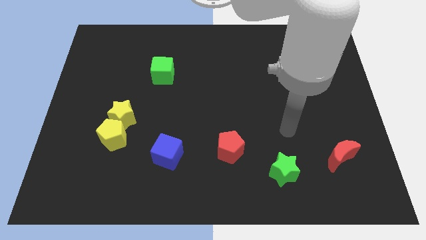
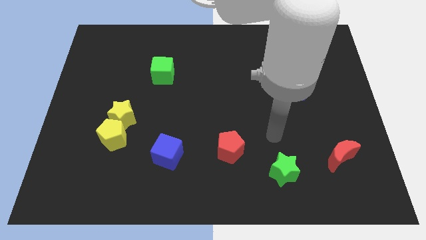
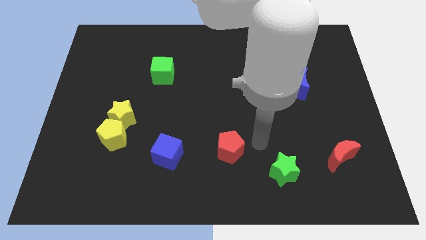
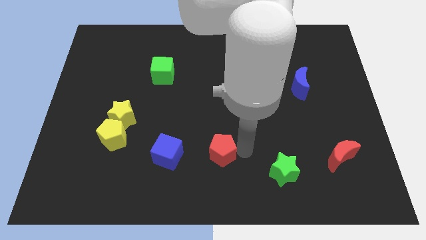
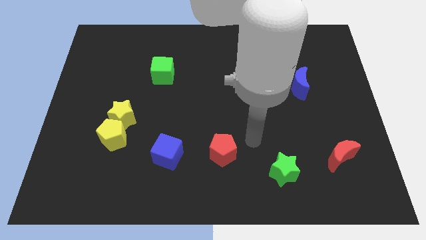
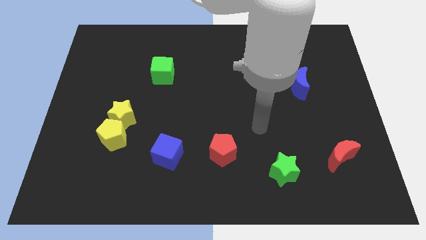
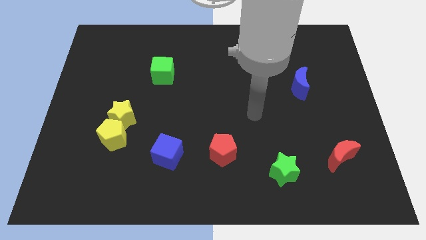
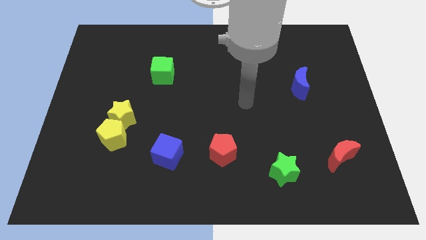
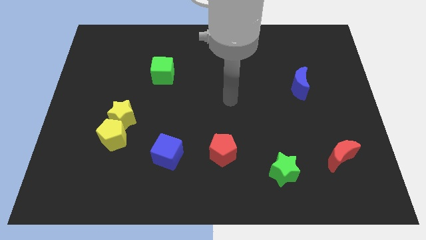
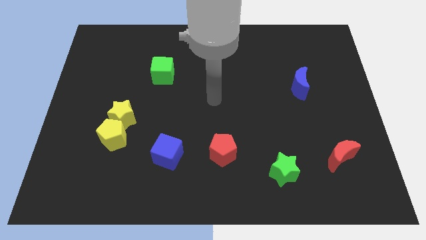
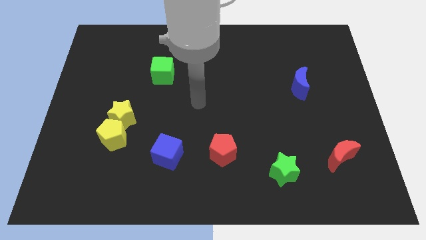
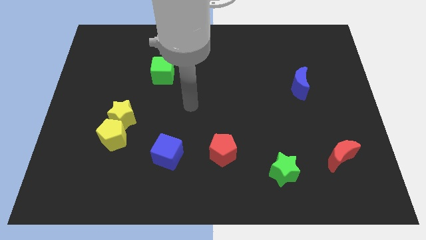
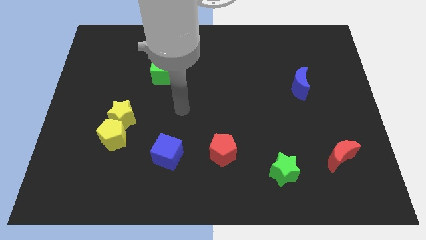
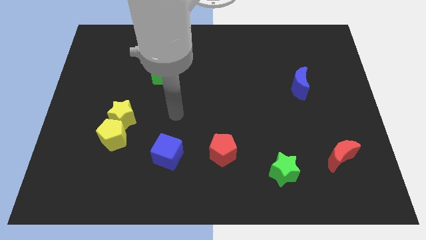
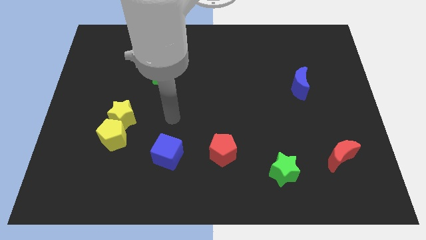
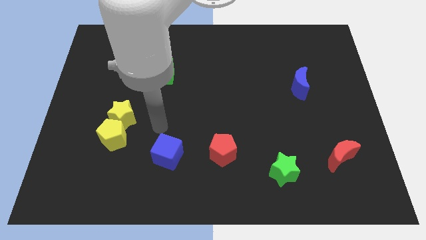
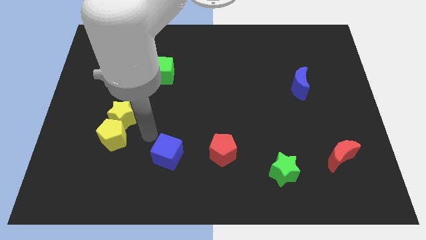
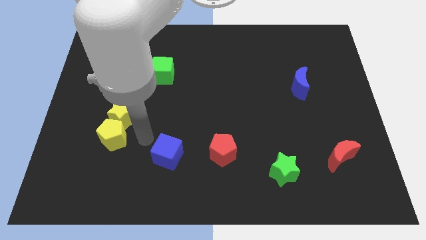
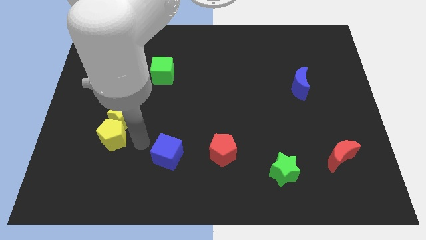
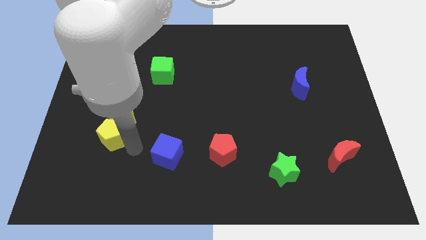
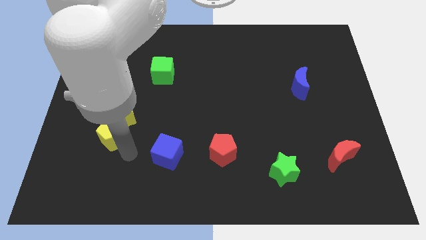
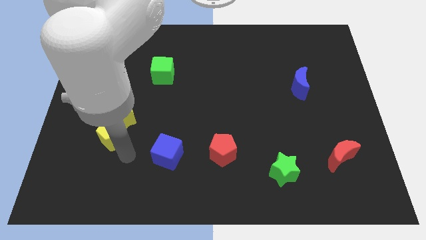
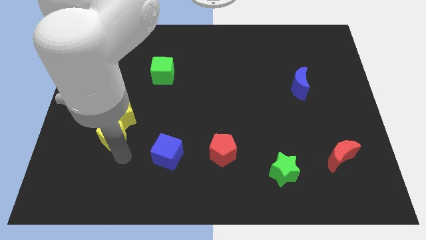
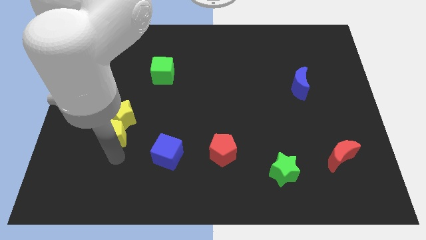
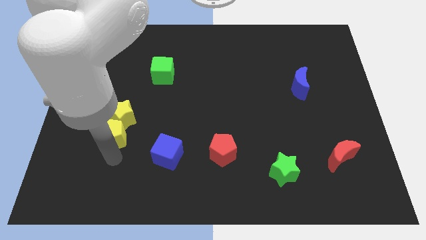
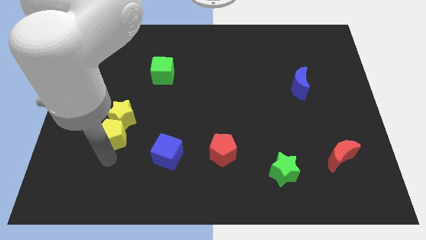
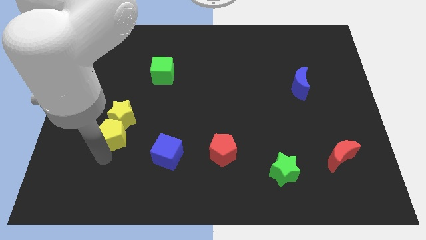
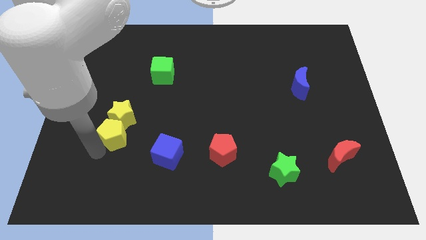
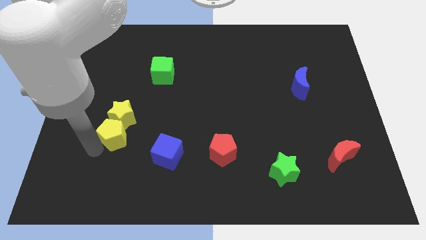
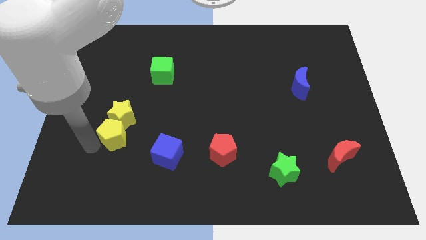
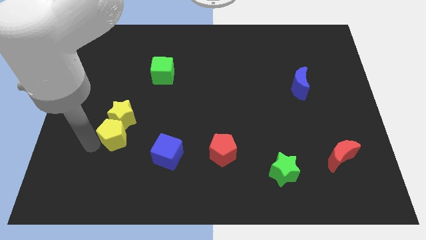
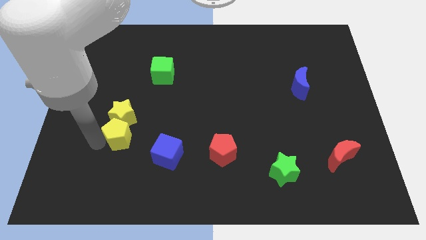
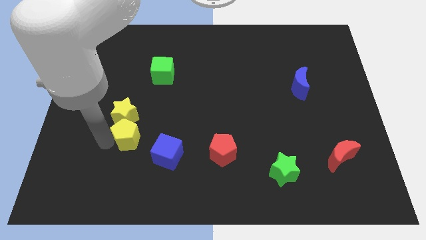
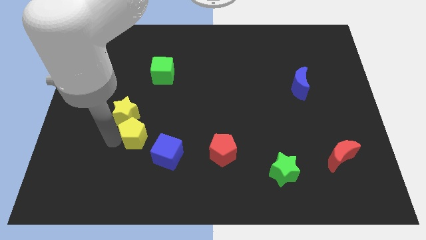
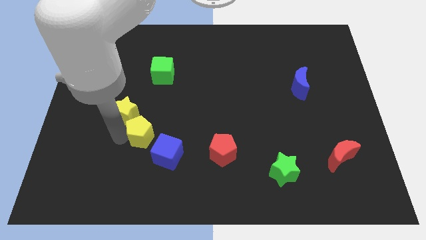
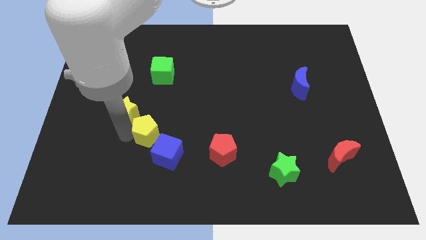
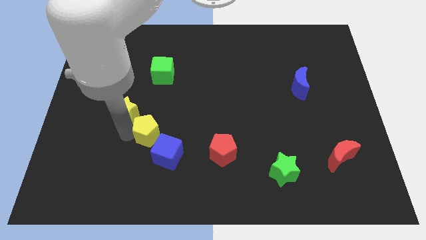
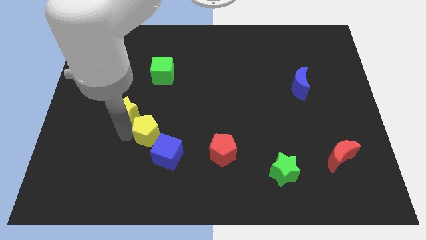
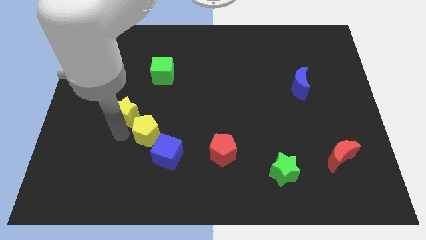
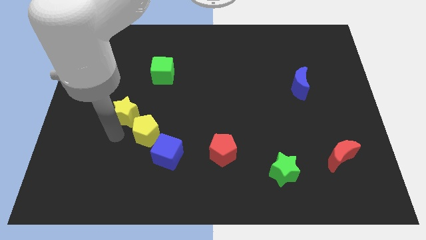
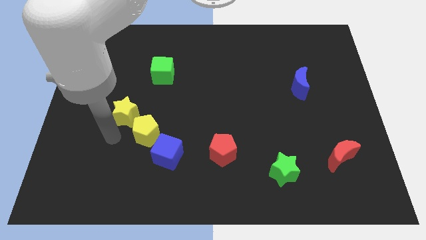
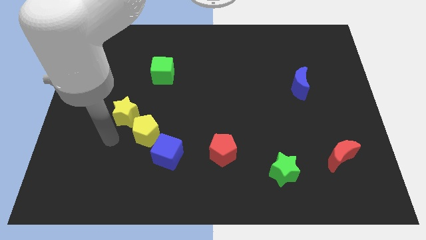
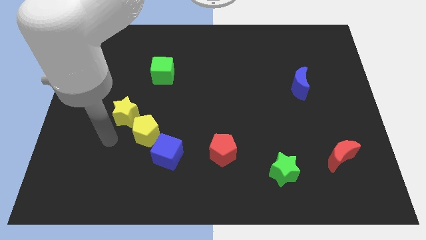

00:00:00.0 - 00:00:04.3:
move the yellow pentagon in between the blue cube and yellow star

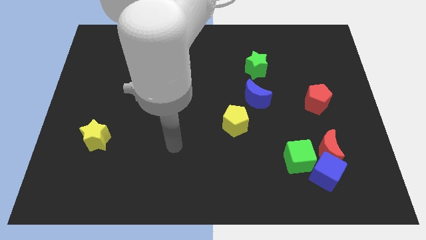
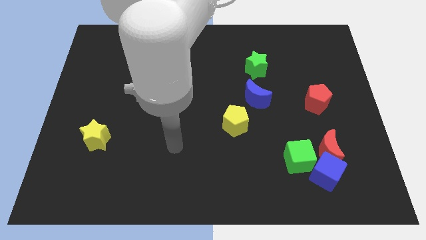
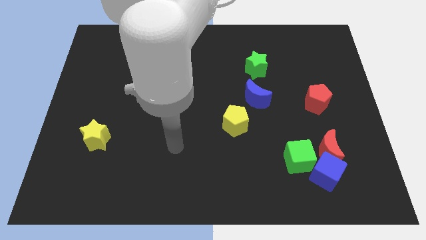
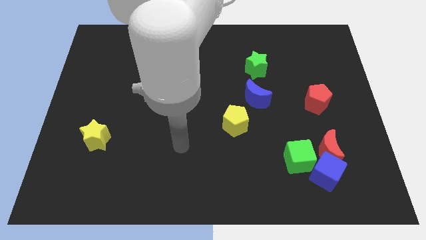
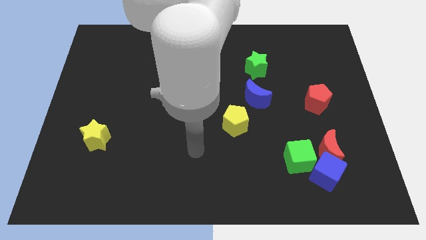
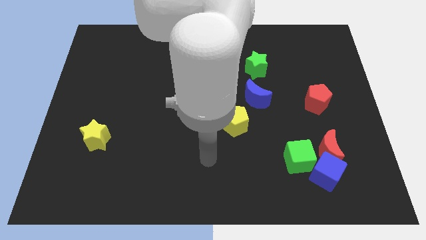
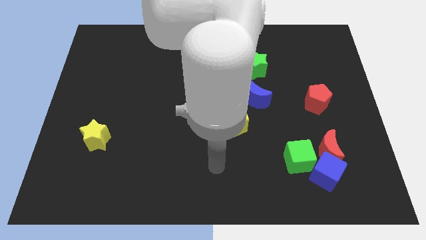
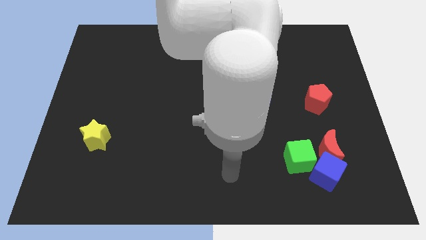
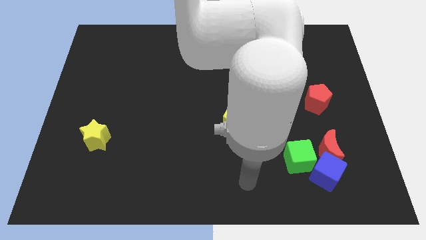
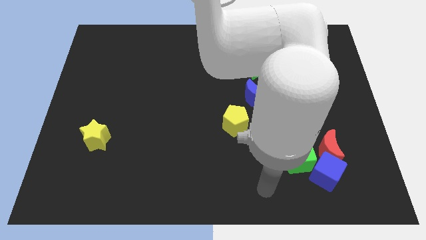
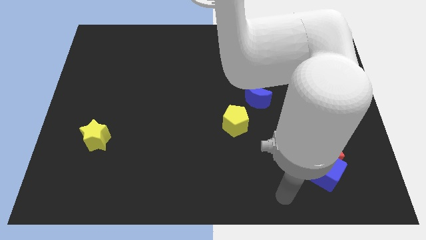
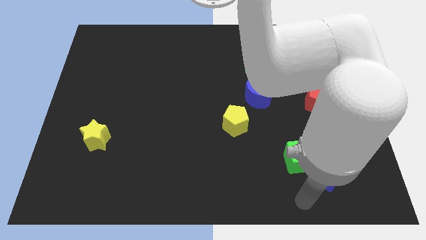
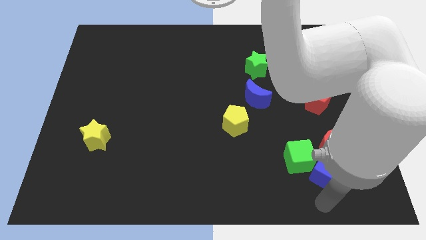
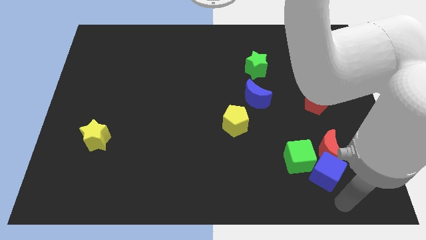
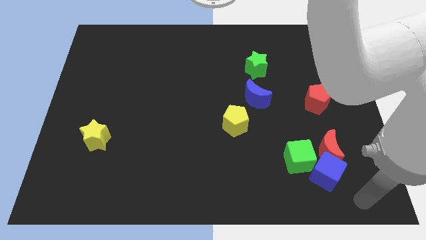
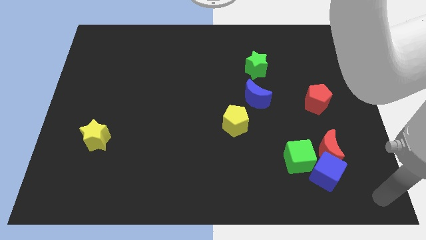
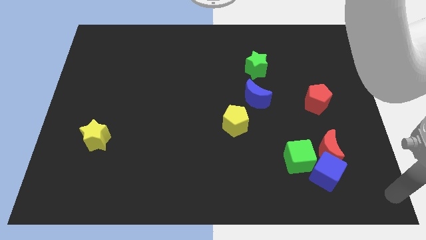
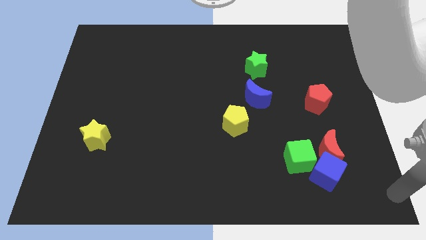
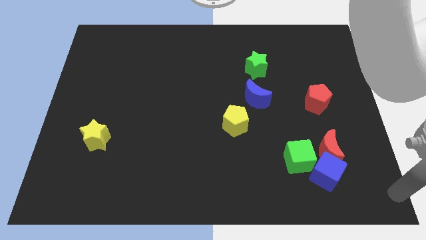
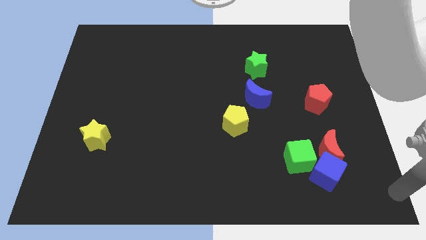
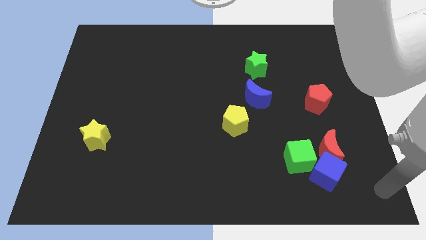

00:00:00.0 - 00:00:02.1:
move the arm to the bottom right

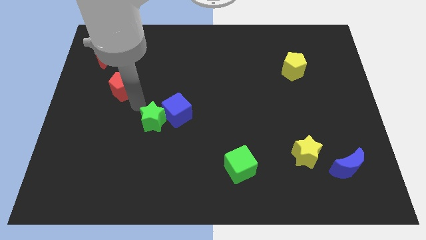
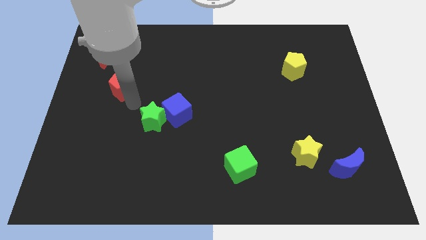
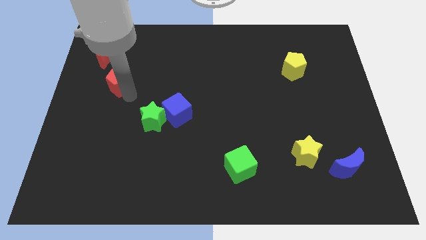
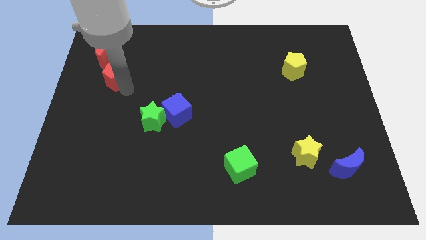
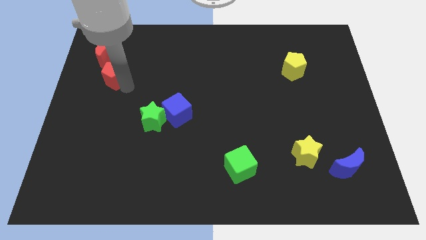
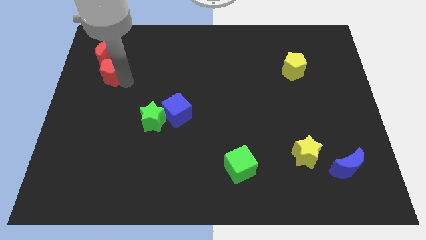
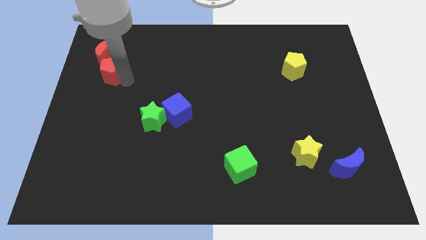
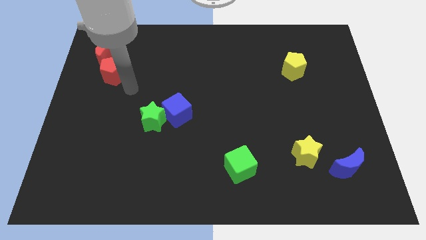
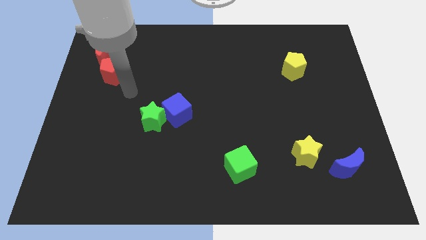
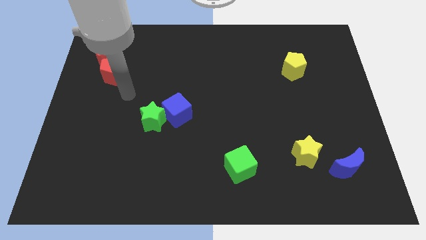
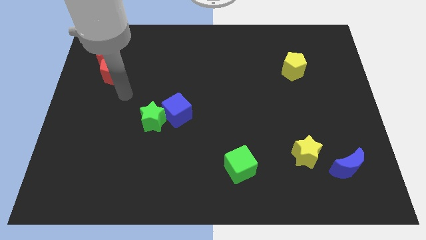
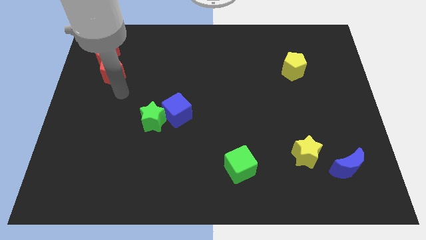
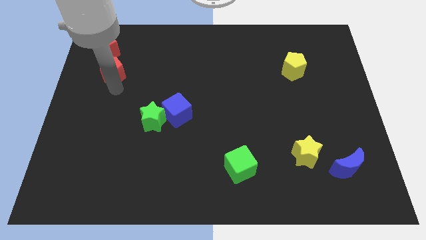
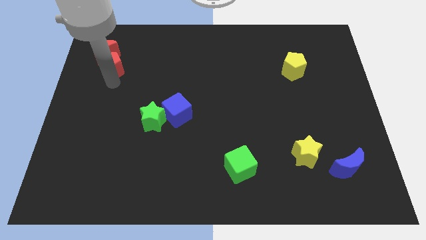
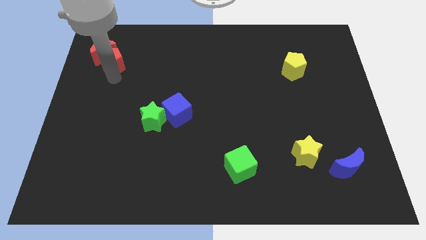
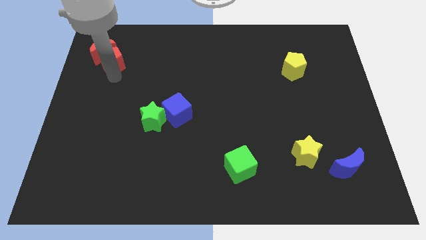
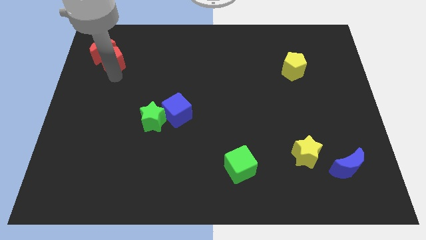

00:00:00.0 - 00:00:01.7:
push the red pentagon into red crescent

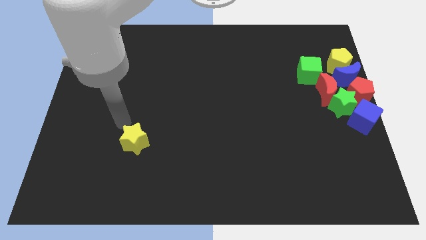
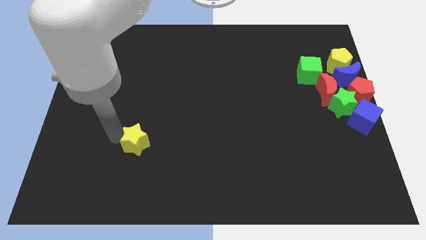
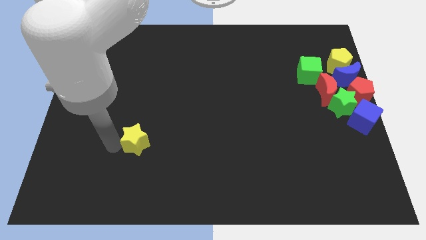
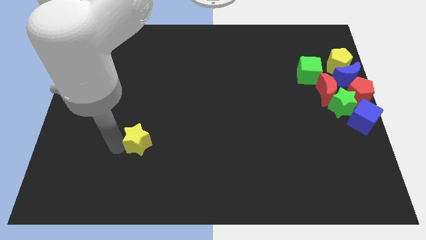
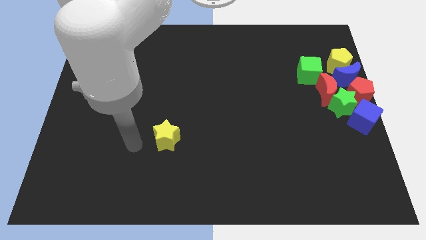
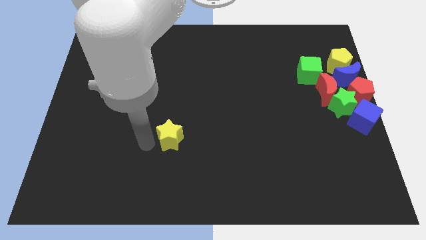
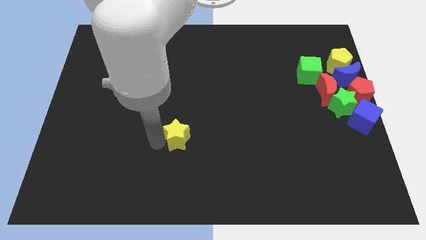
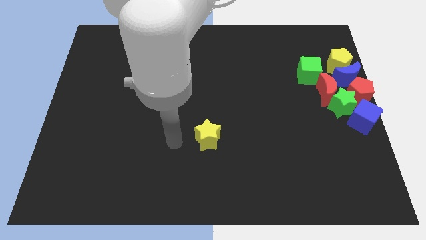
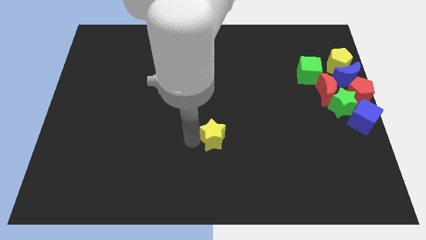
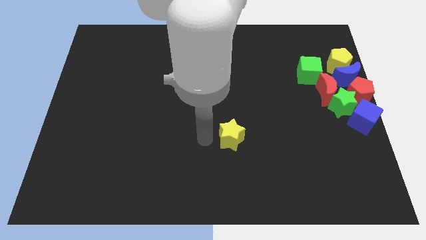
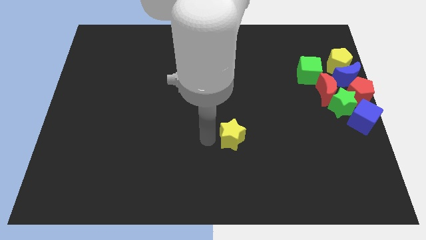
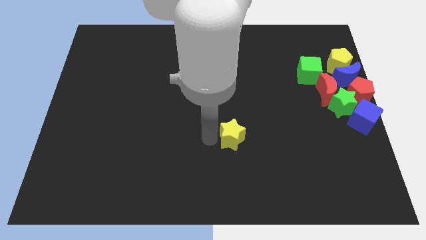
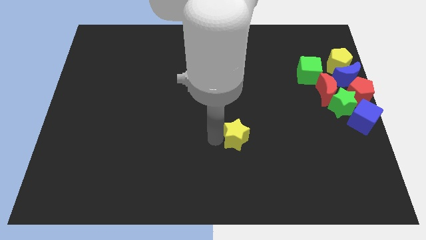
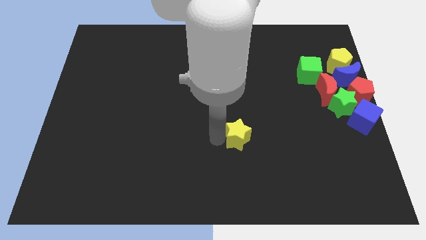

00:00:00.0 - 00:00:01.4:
move the yellow star slightly to the right
